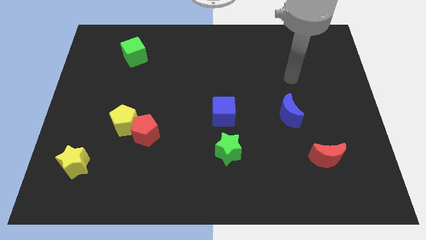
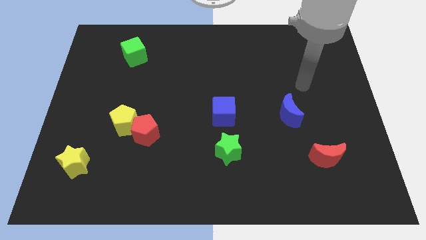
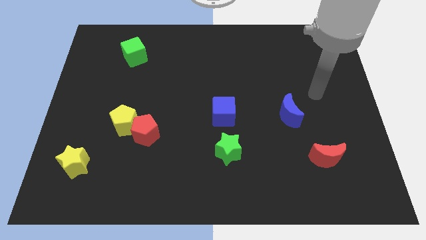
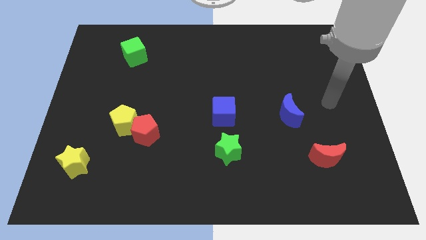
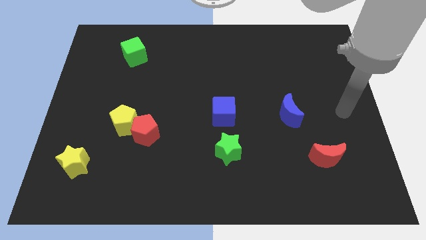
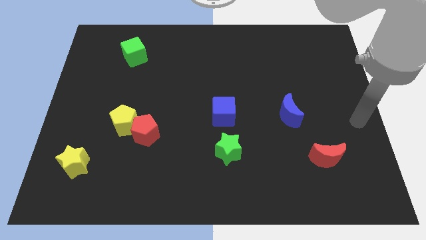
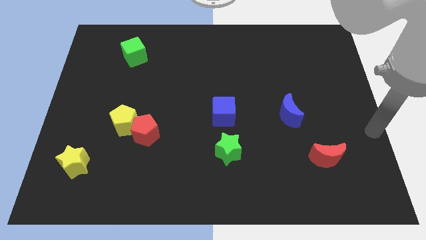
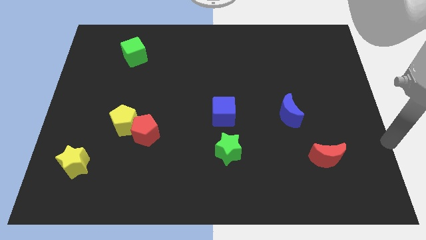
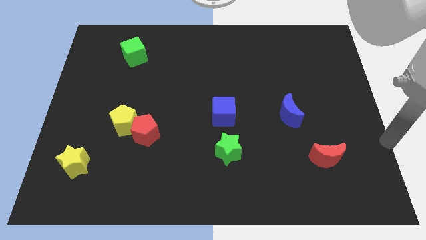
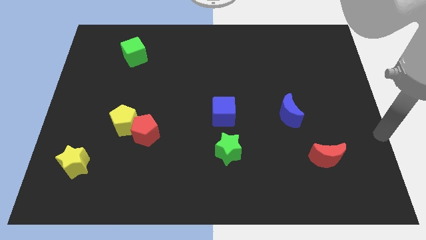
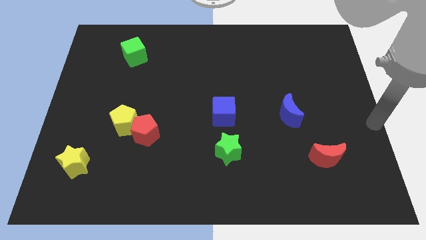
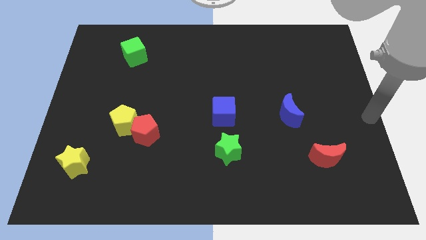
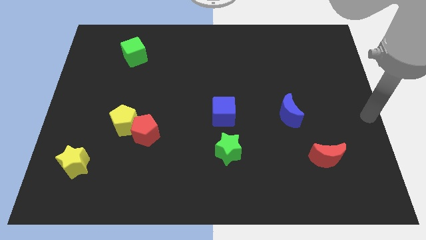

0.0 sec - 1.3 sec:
point your arm at the center right of the board

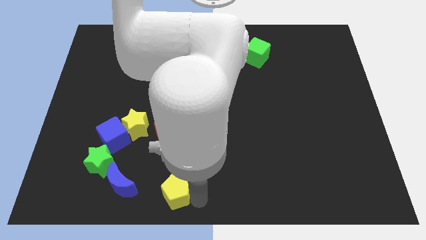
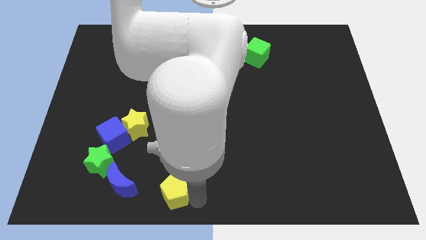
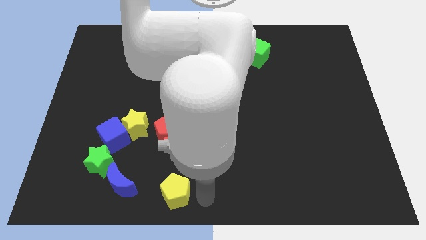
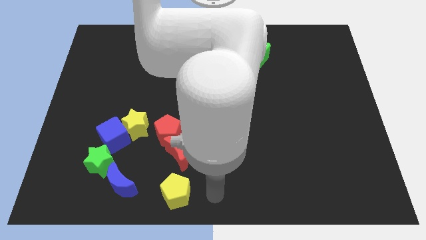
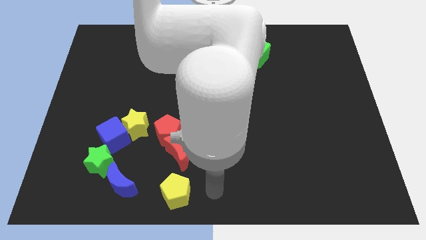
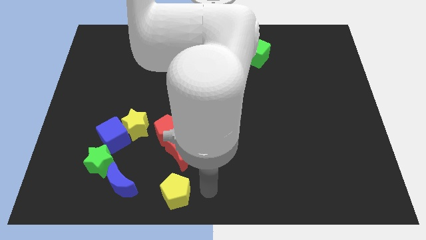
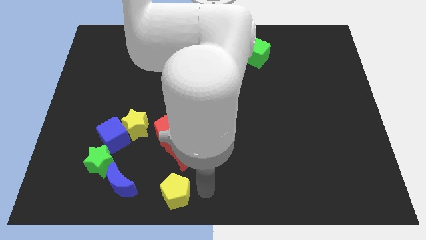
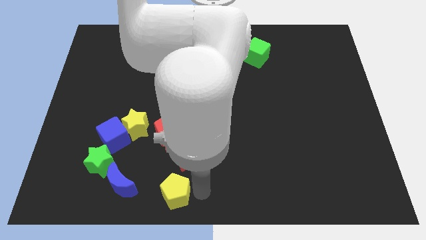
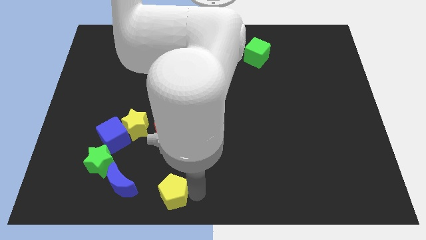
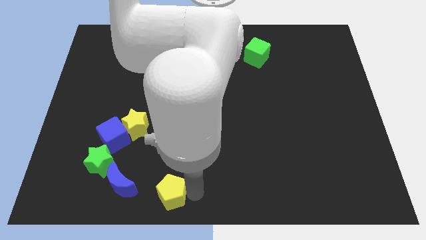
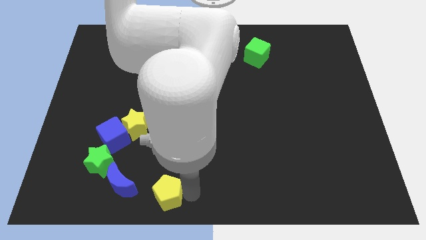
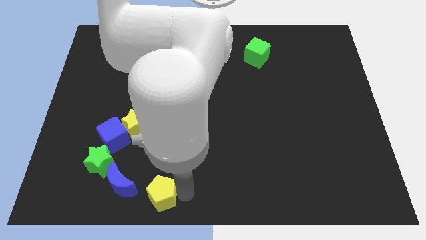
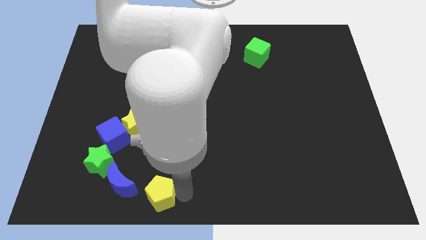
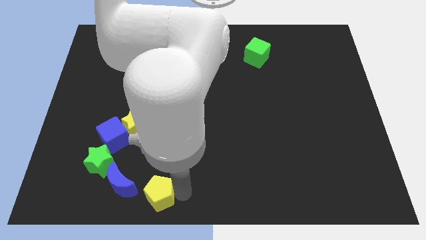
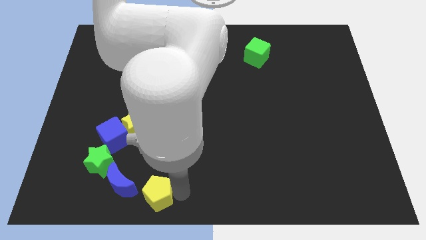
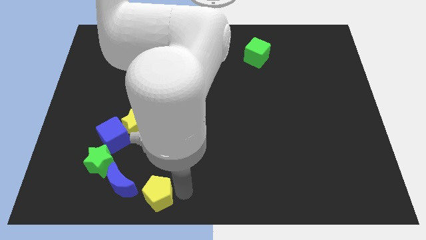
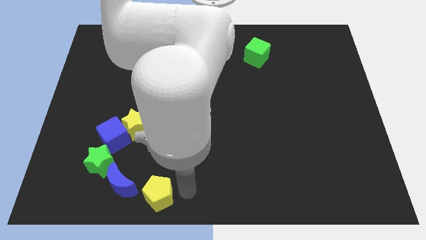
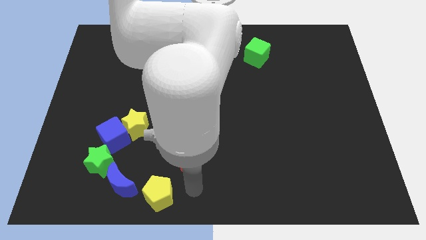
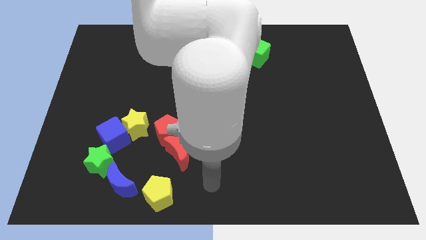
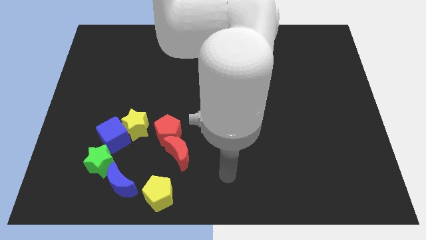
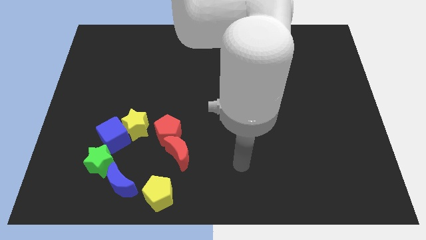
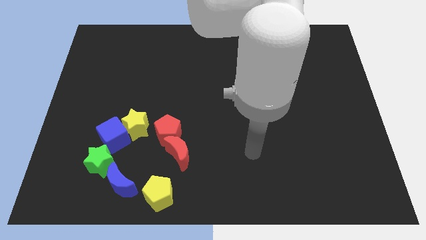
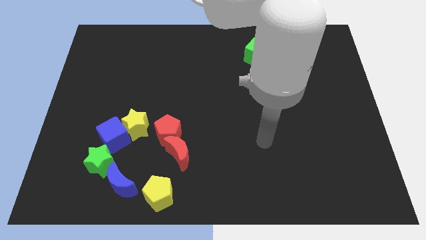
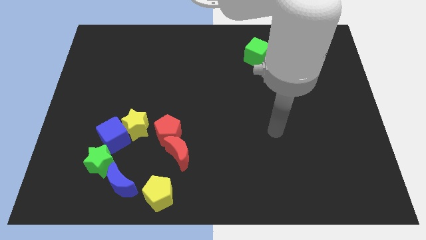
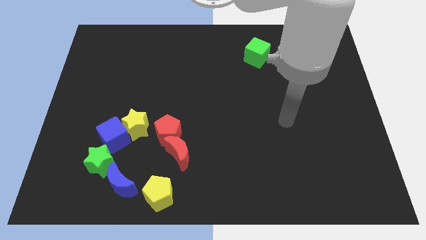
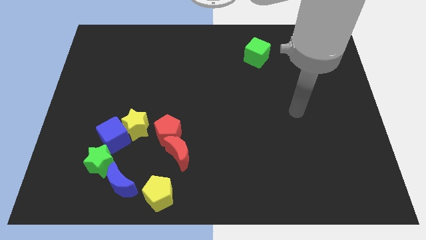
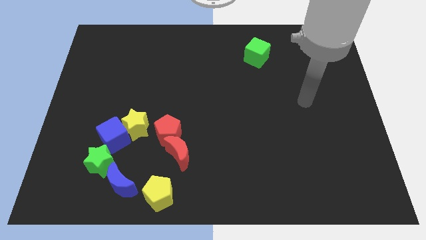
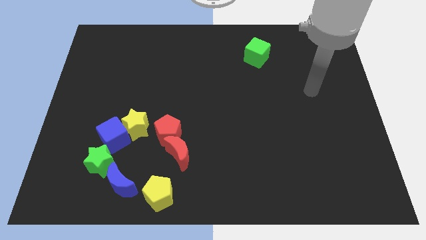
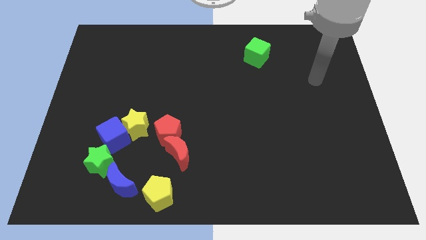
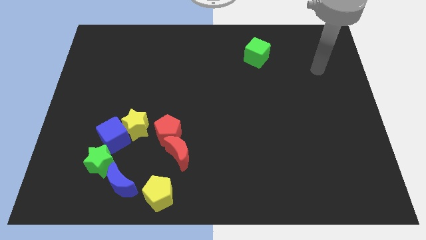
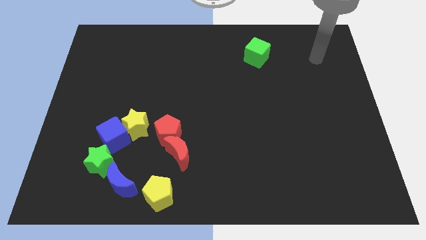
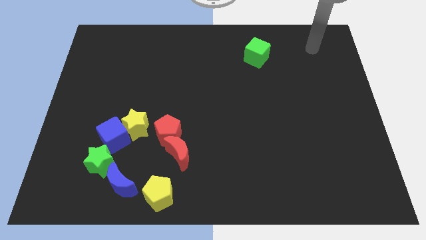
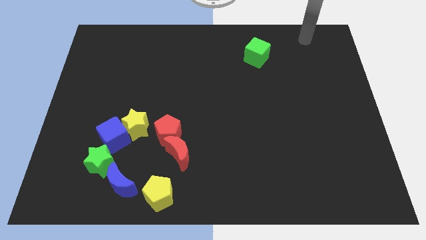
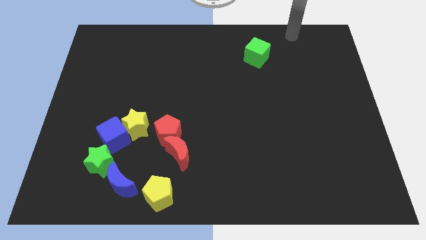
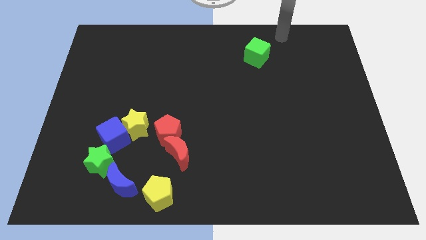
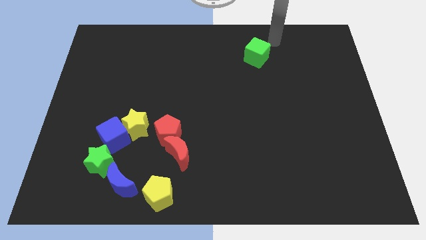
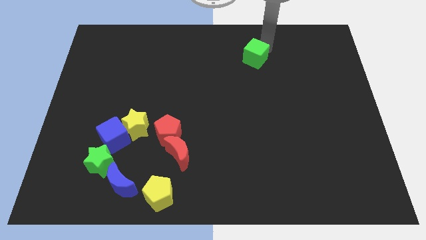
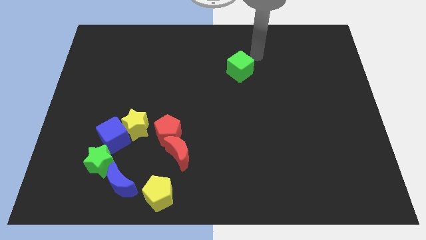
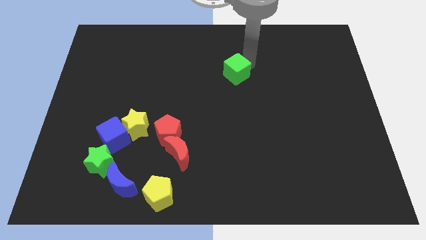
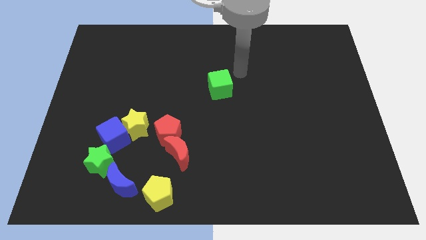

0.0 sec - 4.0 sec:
push the green cube towards the center of the board

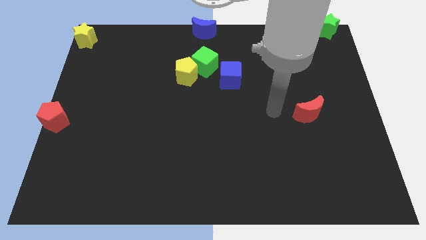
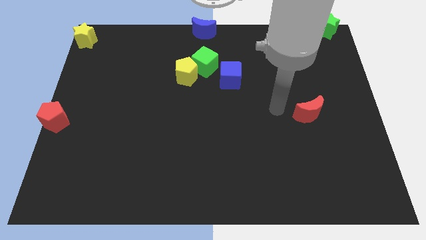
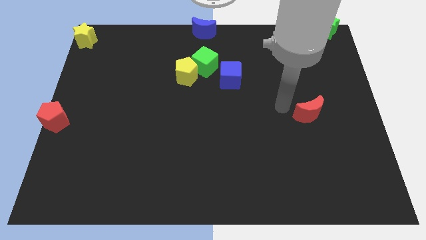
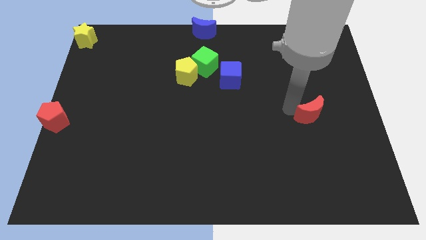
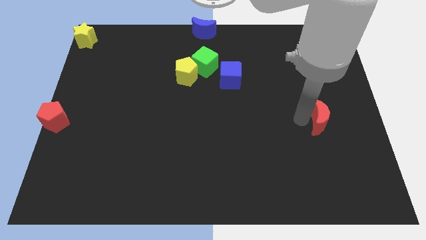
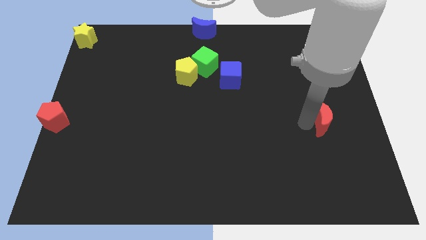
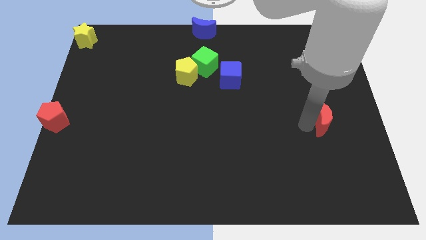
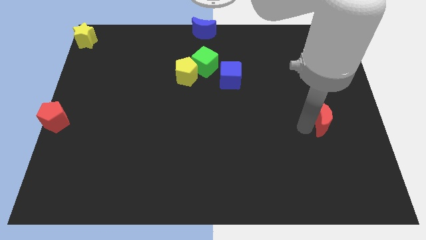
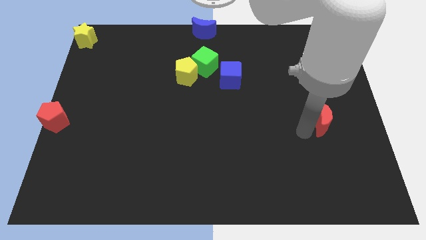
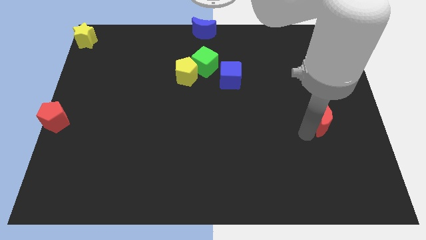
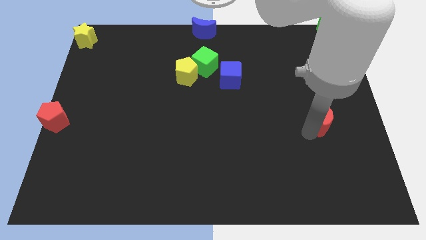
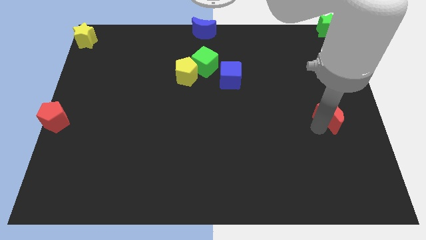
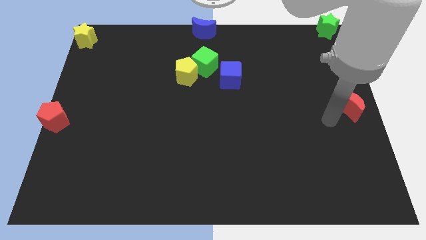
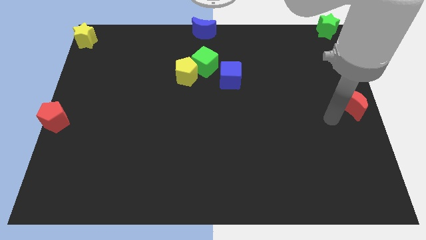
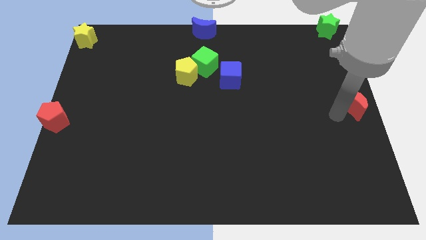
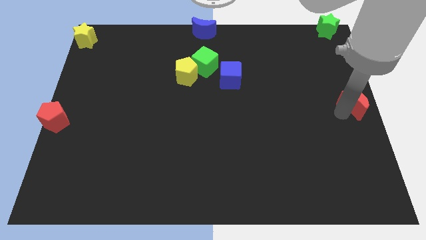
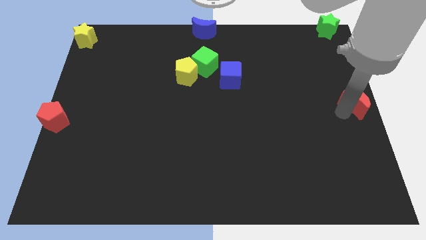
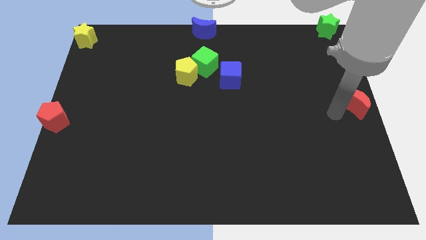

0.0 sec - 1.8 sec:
move the red moon to the center right side of the board

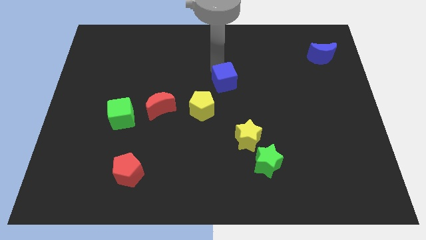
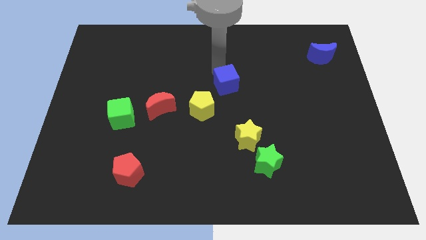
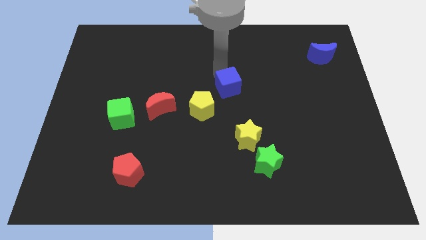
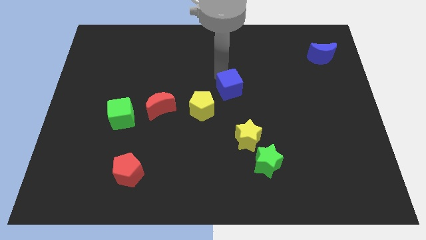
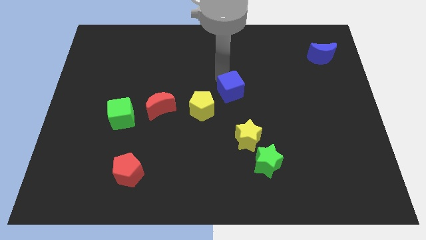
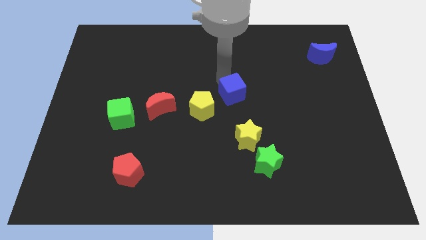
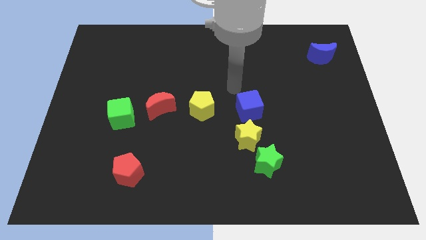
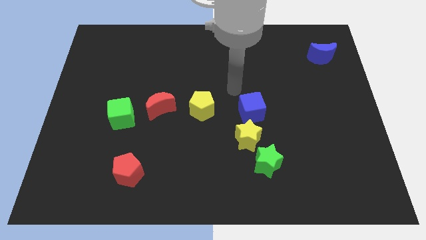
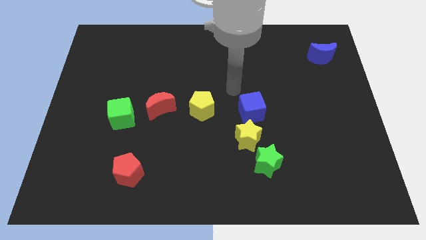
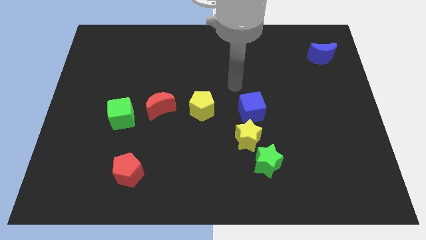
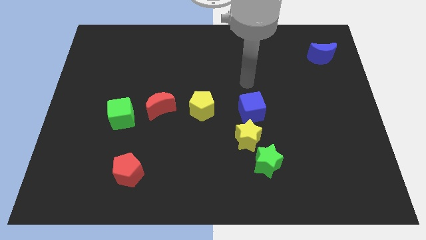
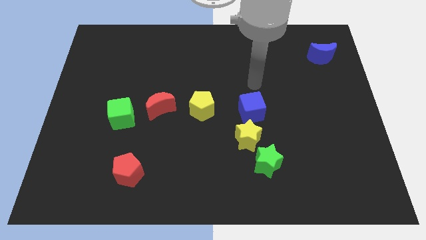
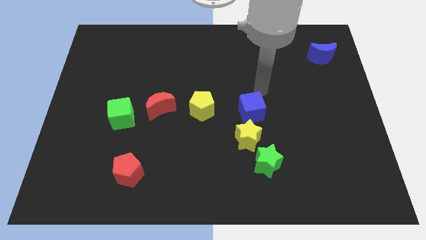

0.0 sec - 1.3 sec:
drag the blue cube close to the yellow star

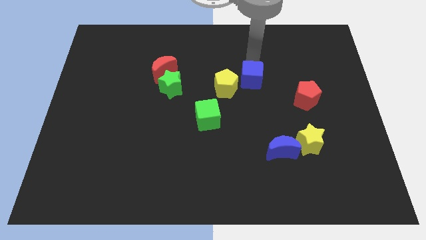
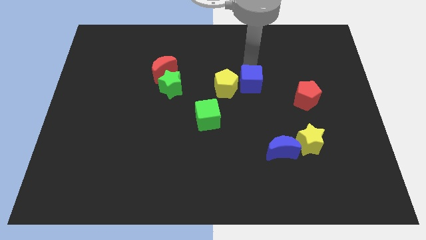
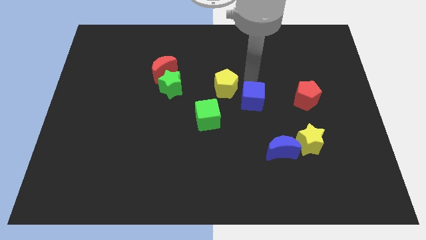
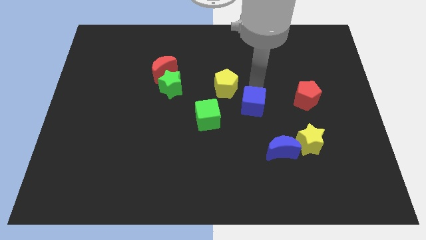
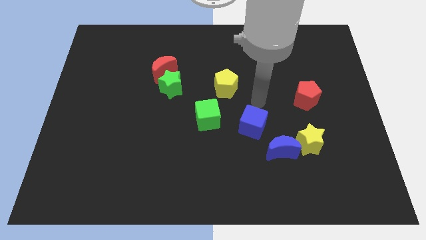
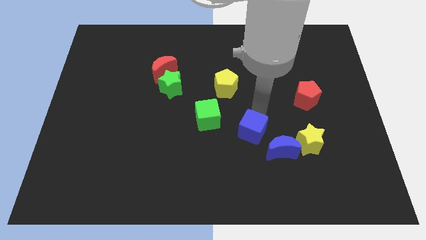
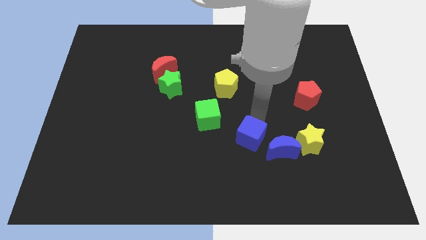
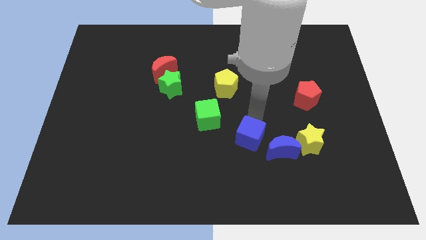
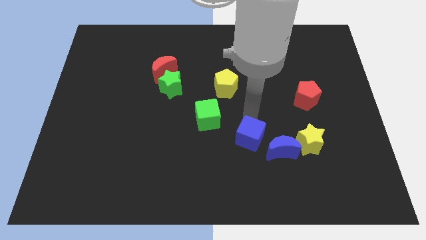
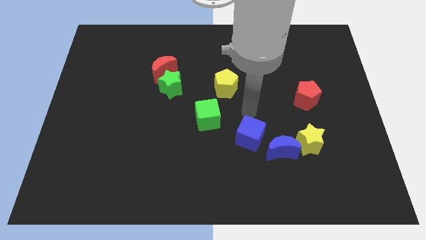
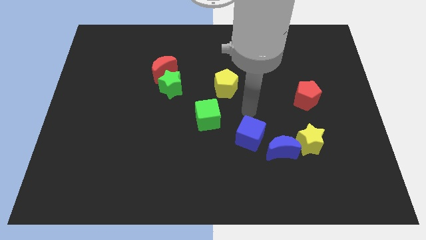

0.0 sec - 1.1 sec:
push the blue cube slightly to the left of blue crescent
